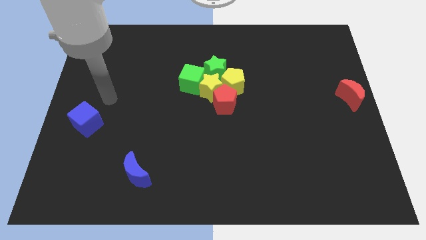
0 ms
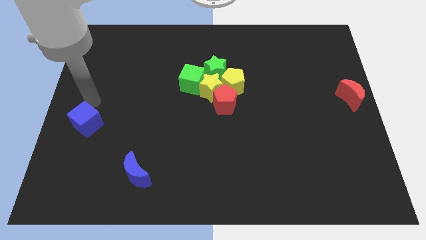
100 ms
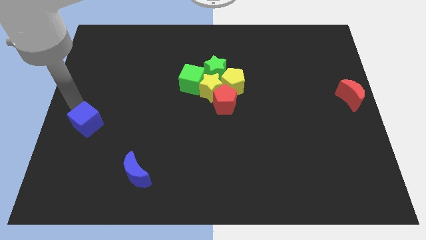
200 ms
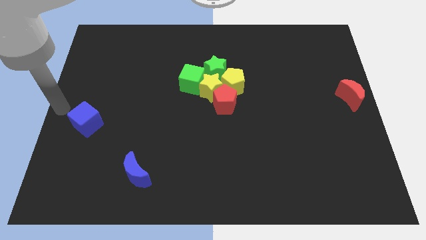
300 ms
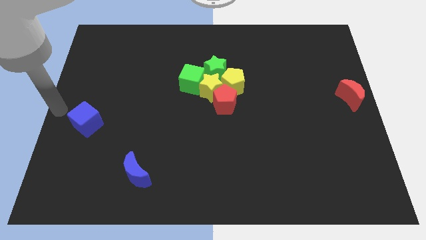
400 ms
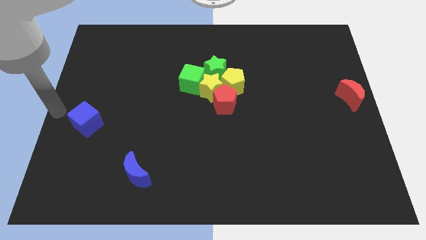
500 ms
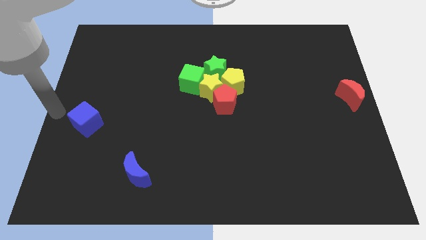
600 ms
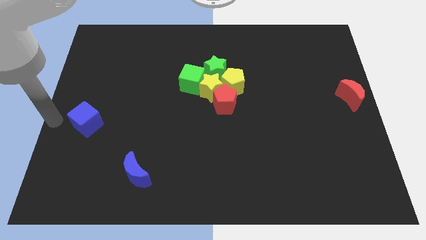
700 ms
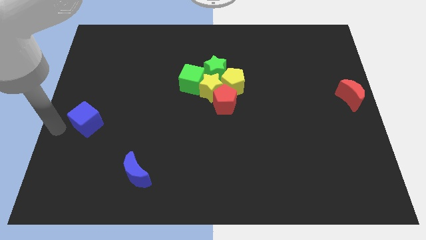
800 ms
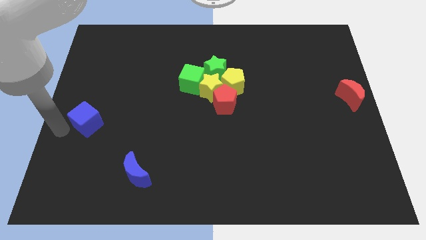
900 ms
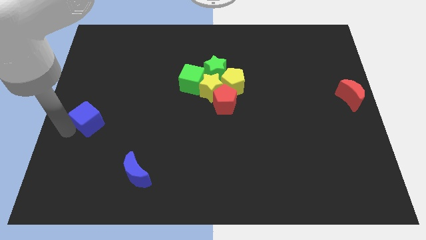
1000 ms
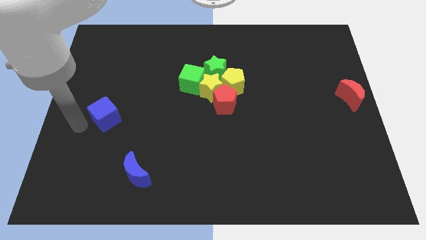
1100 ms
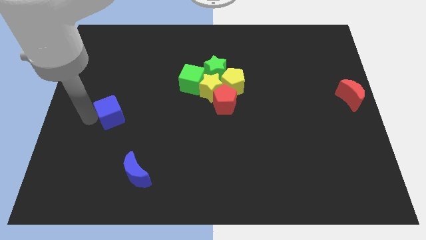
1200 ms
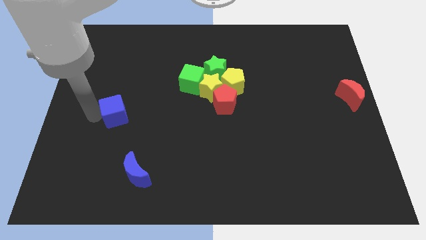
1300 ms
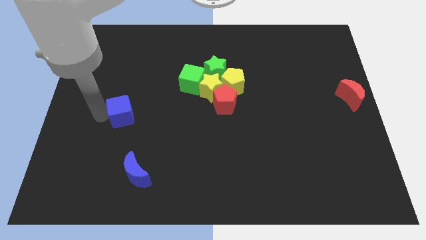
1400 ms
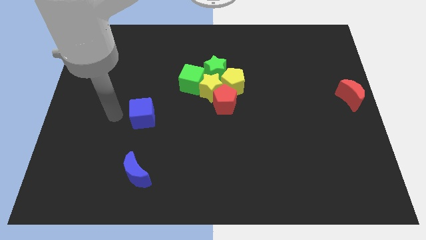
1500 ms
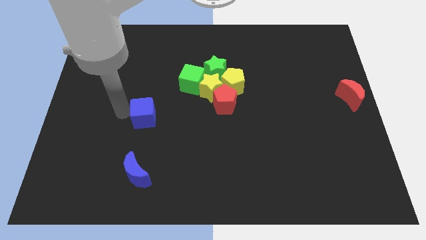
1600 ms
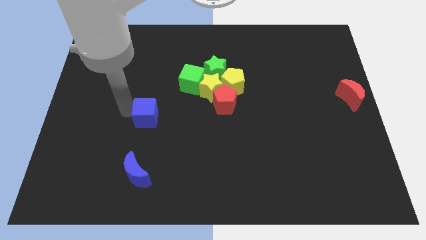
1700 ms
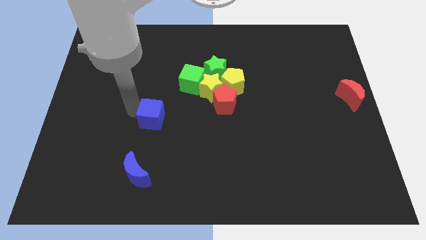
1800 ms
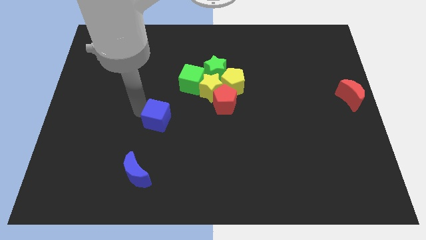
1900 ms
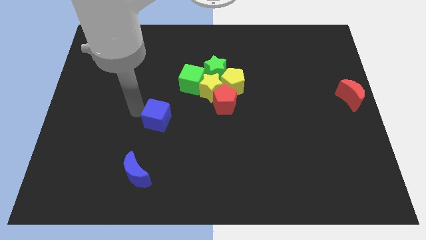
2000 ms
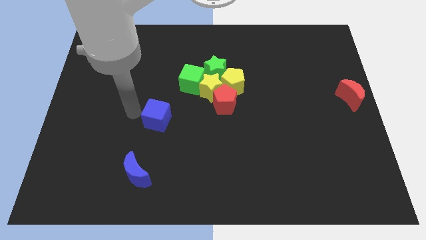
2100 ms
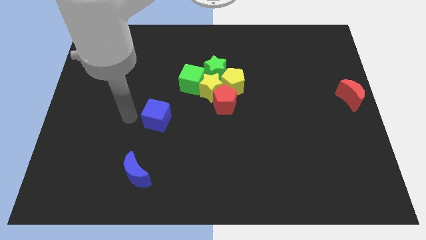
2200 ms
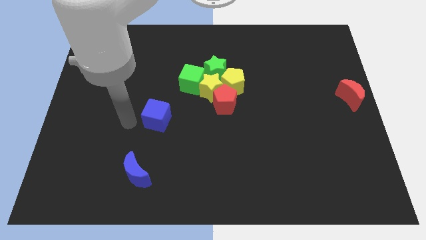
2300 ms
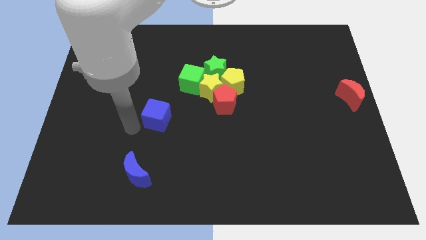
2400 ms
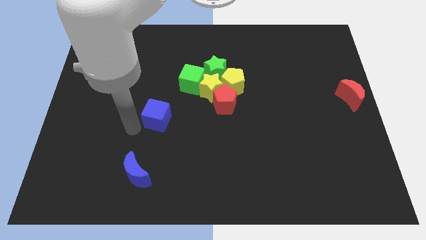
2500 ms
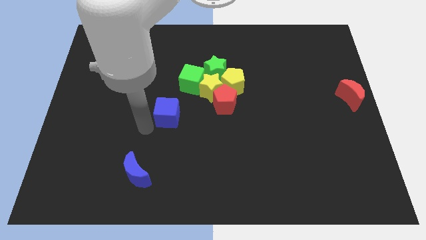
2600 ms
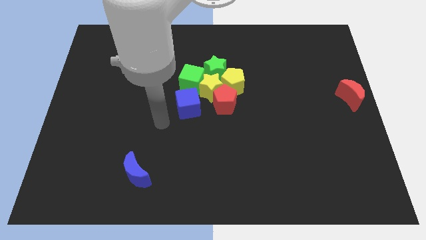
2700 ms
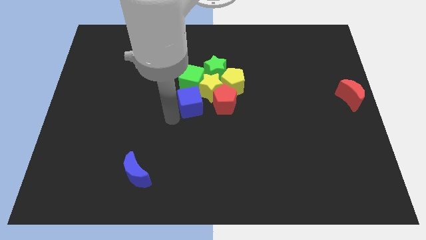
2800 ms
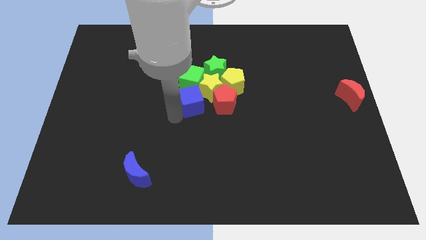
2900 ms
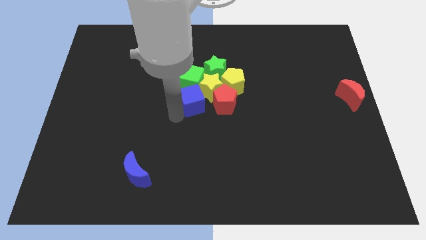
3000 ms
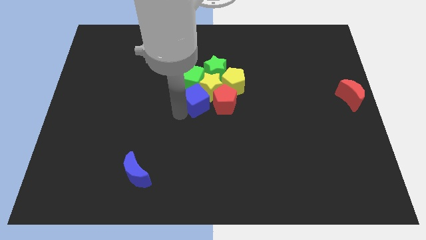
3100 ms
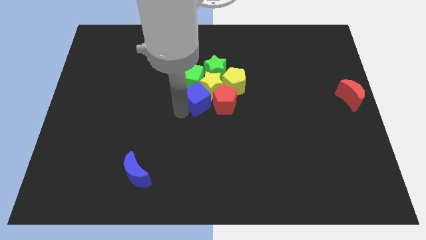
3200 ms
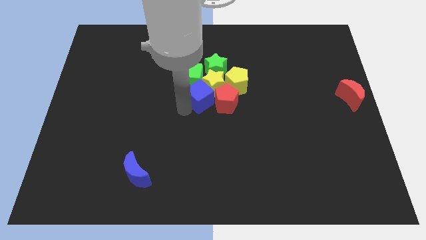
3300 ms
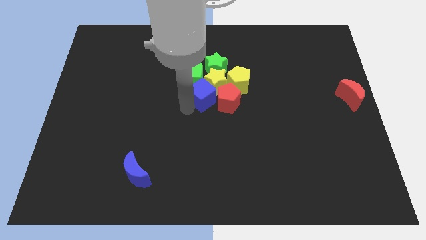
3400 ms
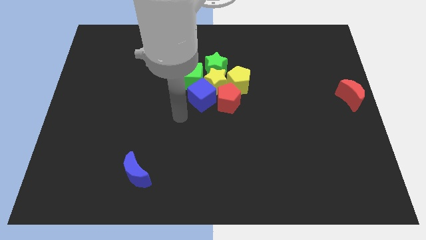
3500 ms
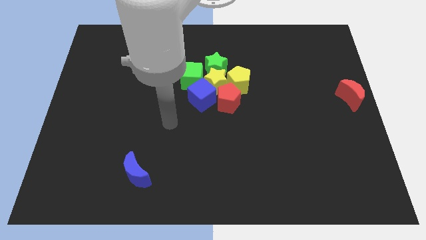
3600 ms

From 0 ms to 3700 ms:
push the blue cube to the center of the board

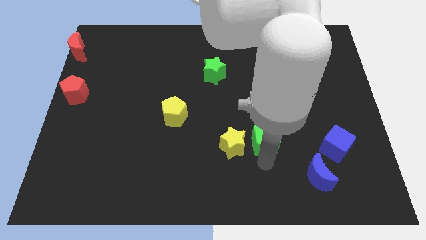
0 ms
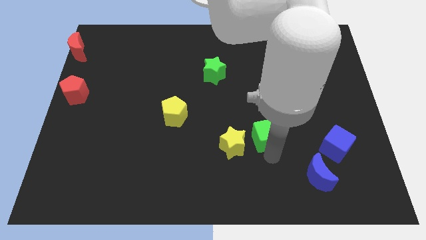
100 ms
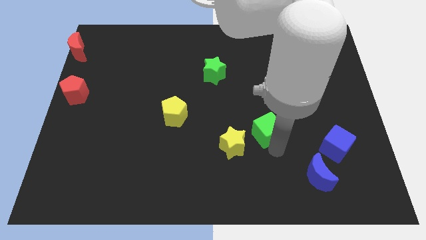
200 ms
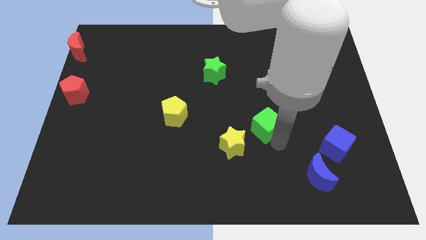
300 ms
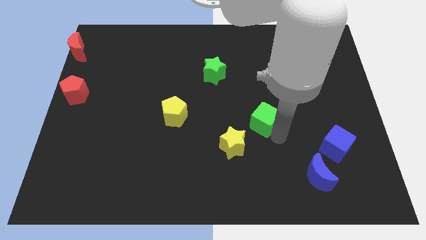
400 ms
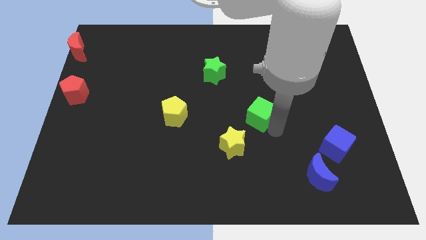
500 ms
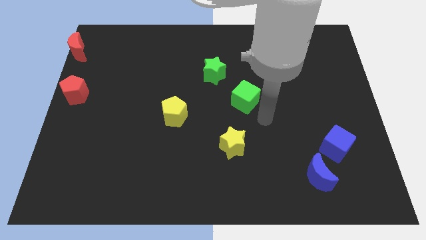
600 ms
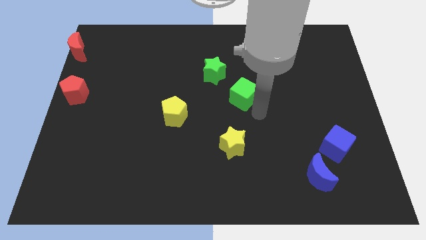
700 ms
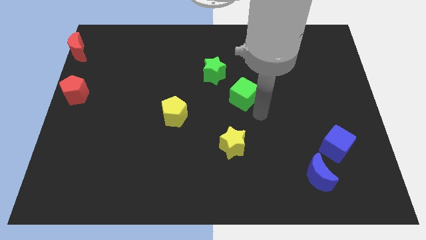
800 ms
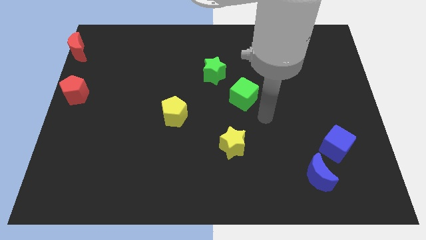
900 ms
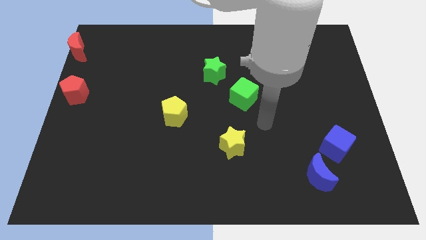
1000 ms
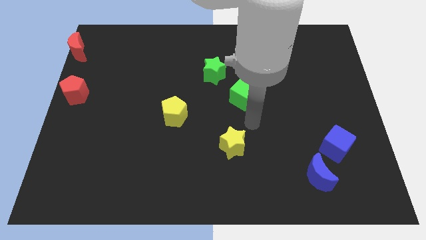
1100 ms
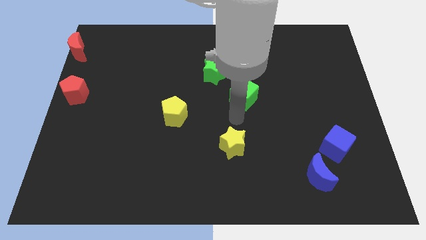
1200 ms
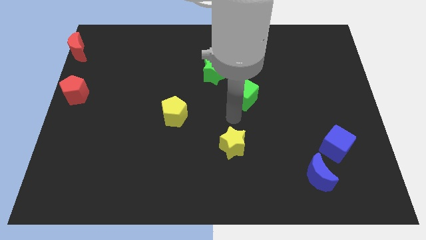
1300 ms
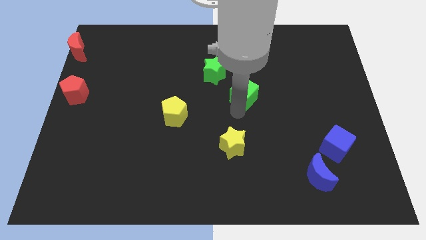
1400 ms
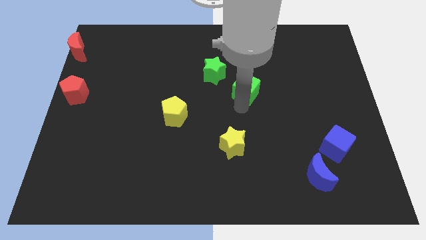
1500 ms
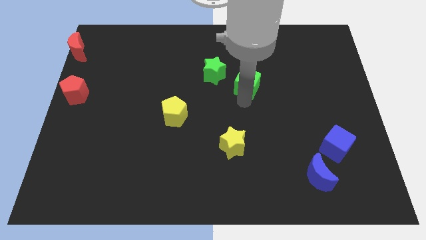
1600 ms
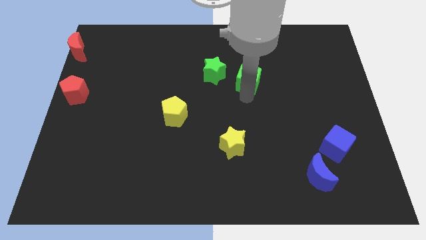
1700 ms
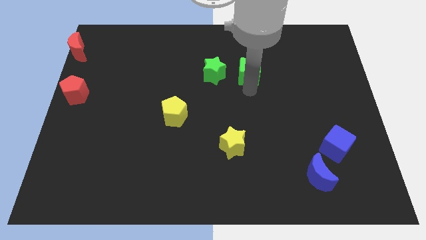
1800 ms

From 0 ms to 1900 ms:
push the green cube right to the green star

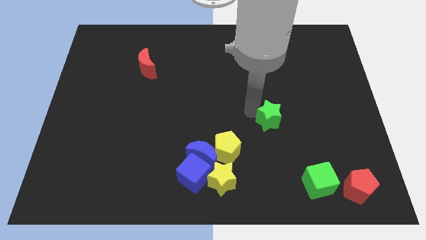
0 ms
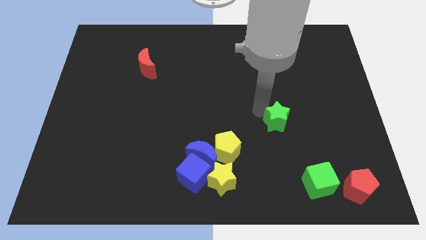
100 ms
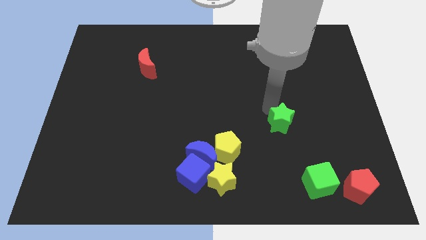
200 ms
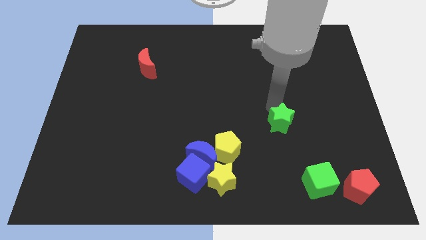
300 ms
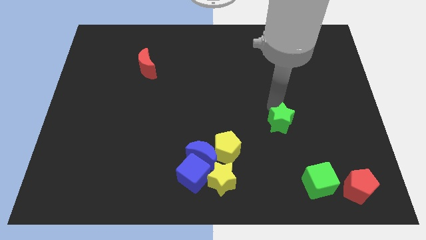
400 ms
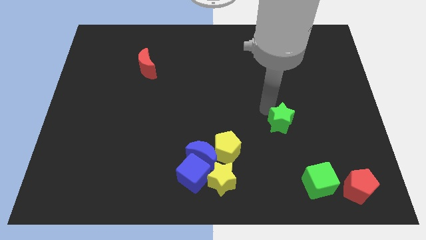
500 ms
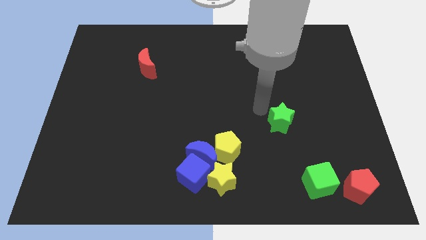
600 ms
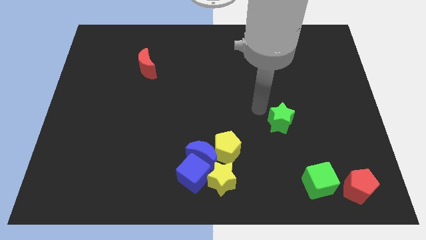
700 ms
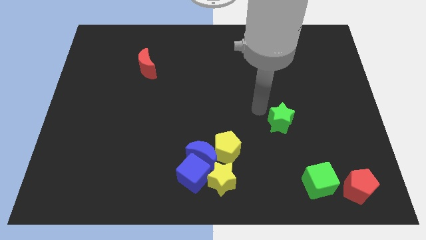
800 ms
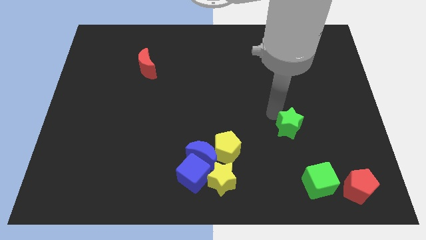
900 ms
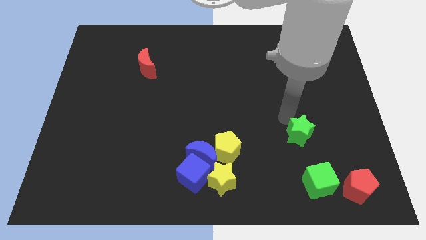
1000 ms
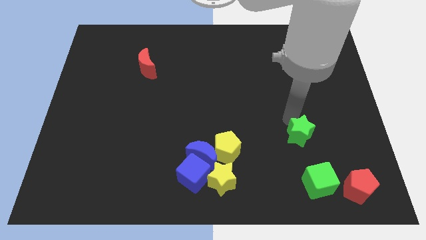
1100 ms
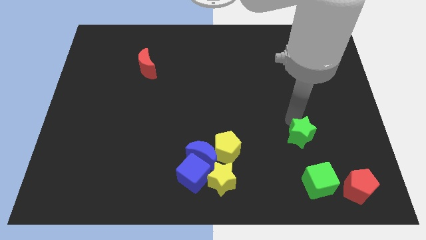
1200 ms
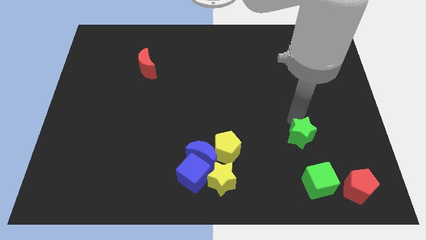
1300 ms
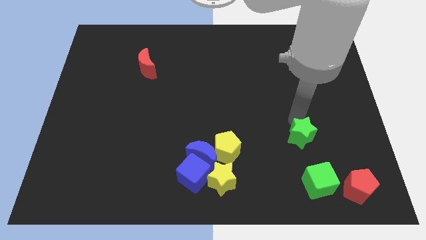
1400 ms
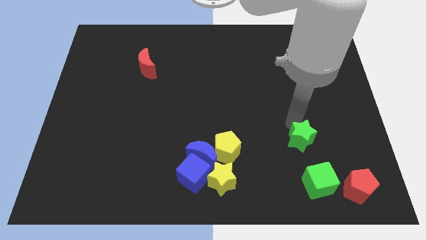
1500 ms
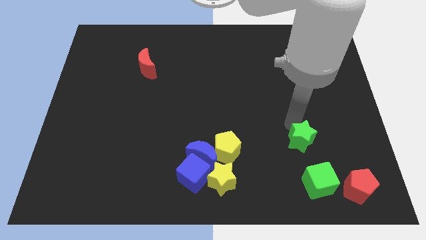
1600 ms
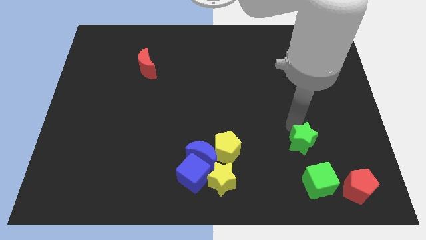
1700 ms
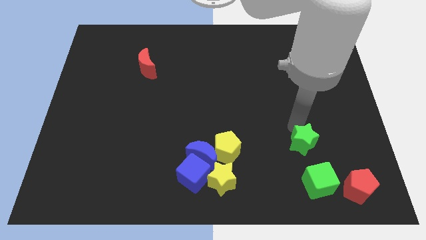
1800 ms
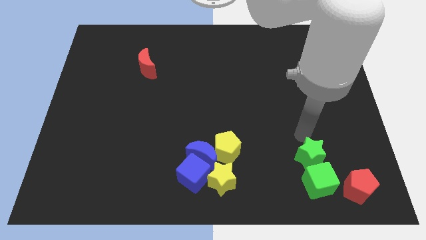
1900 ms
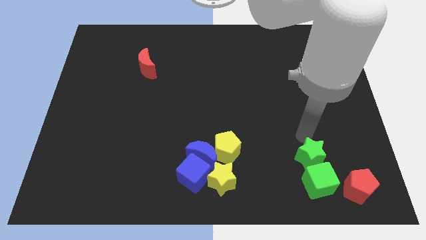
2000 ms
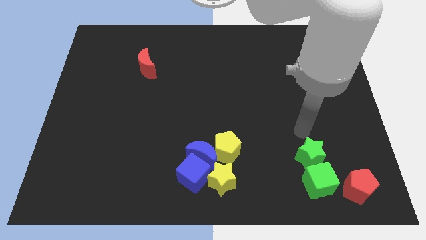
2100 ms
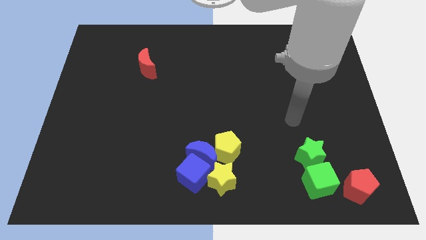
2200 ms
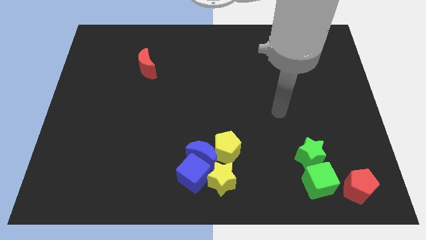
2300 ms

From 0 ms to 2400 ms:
push the green star into the green cube

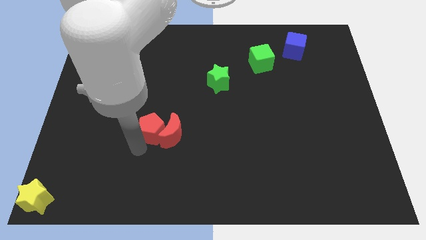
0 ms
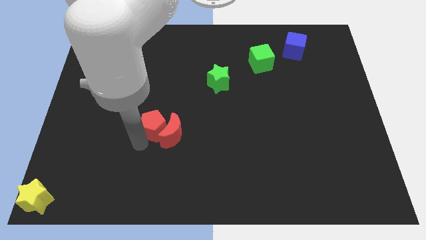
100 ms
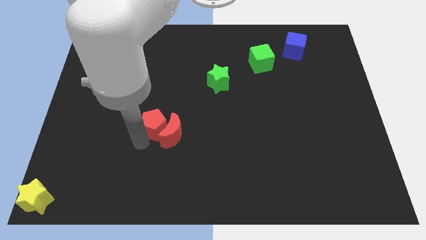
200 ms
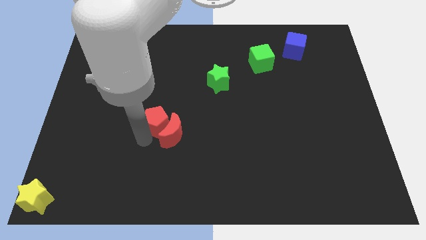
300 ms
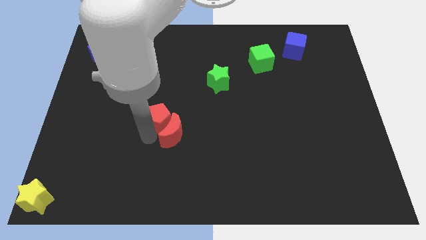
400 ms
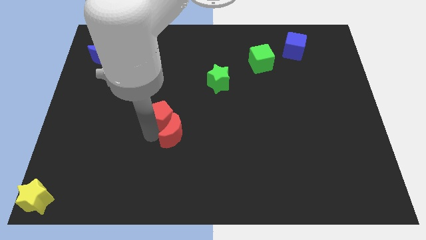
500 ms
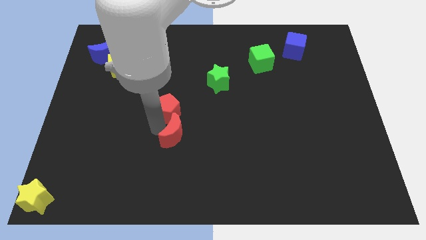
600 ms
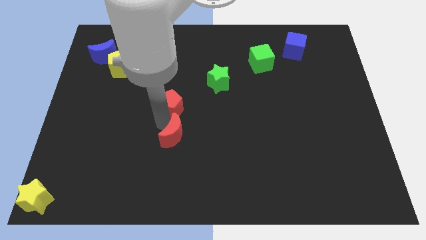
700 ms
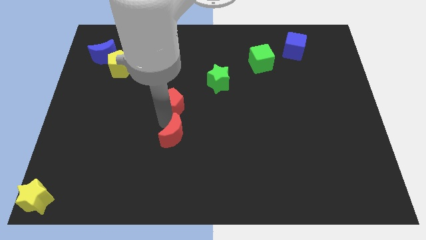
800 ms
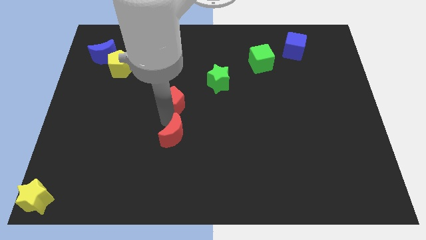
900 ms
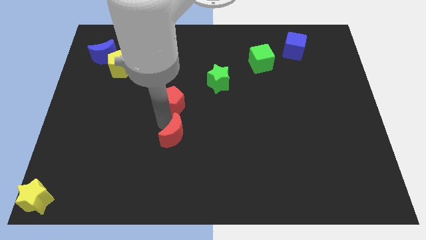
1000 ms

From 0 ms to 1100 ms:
place red pentagon above red moon
